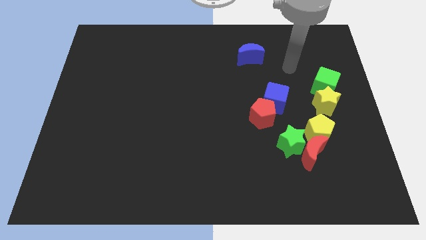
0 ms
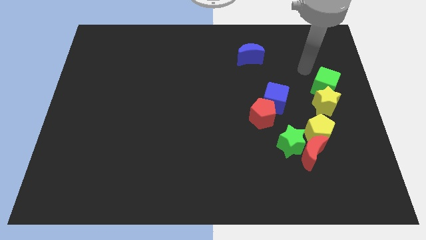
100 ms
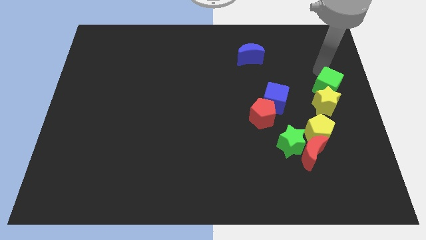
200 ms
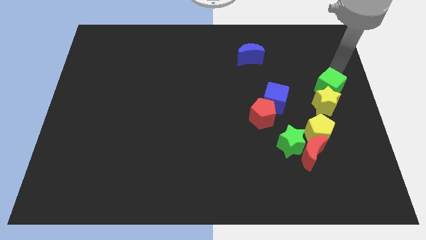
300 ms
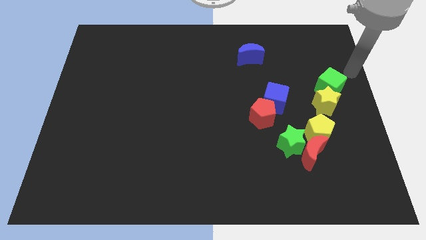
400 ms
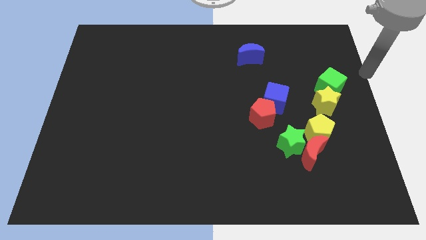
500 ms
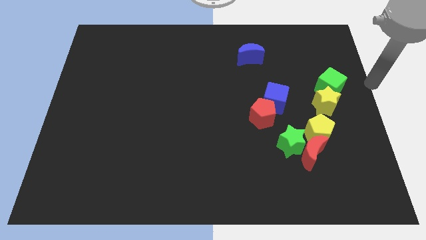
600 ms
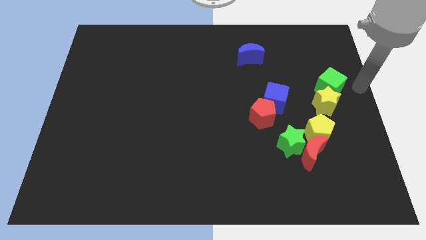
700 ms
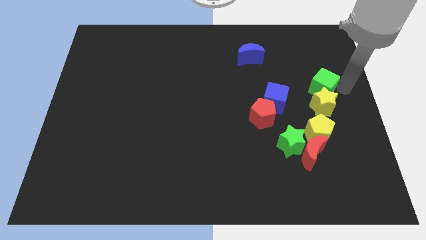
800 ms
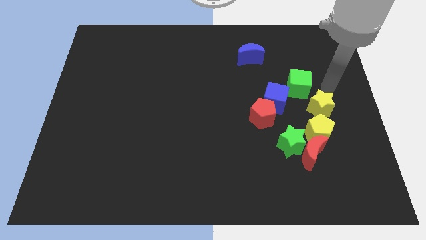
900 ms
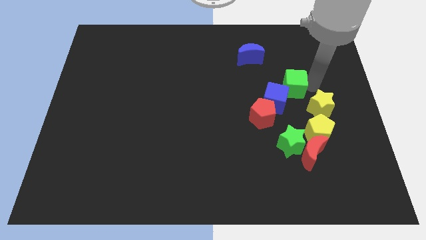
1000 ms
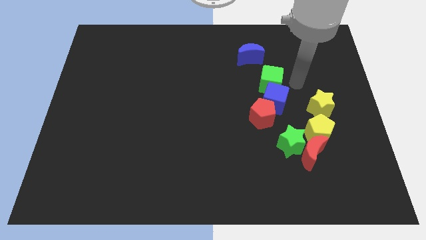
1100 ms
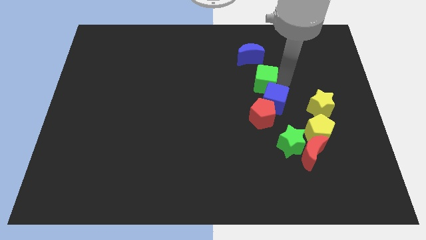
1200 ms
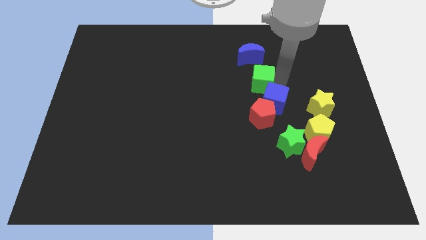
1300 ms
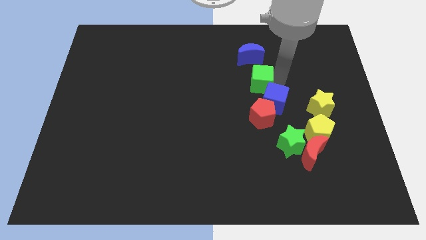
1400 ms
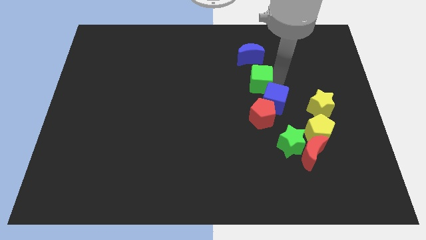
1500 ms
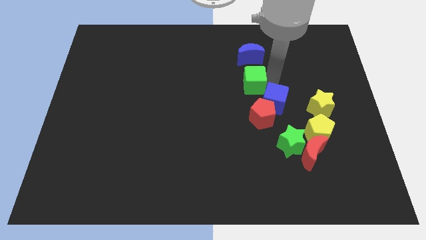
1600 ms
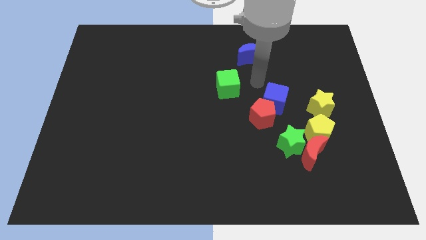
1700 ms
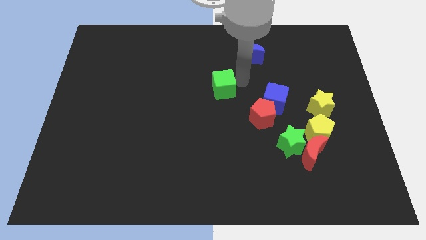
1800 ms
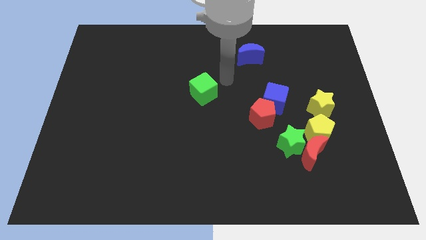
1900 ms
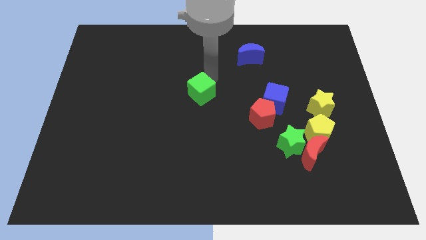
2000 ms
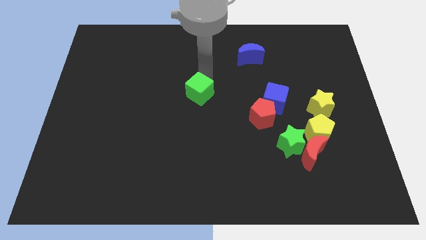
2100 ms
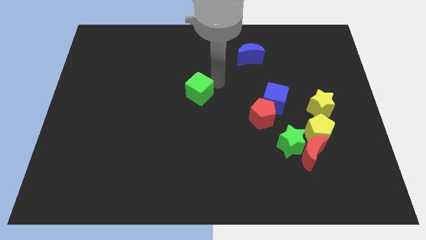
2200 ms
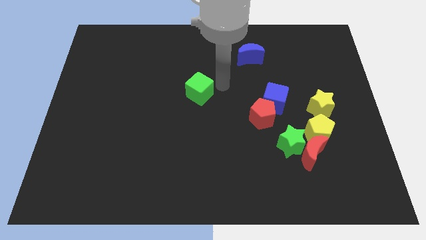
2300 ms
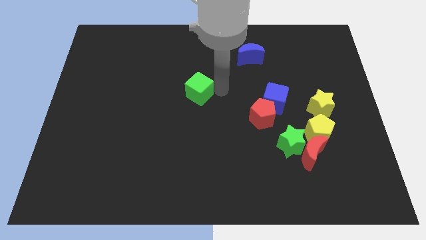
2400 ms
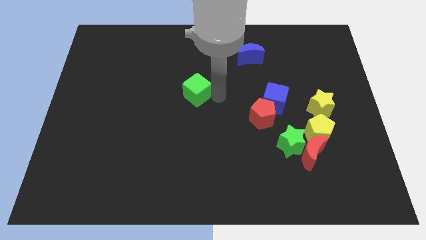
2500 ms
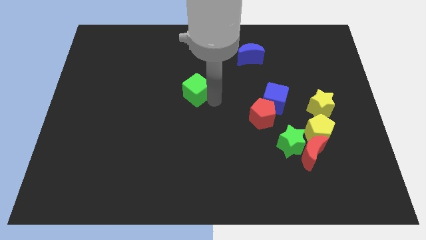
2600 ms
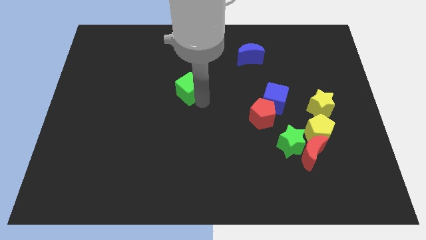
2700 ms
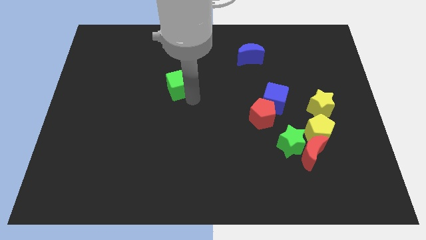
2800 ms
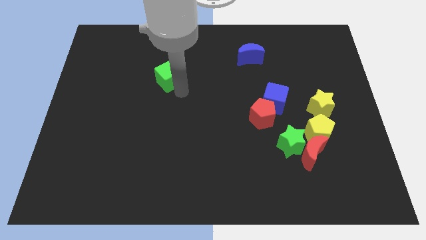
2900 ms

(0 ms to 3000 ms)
move green cube slightly left

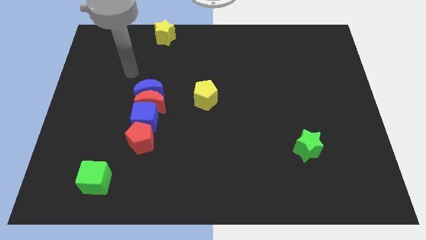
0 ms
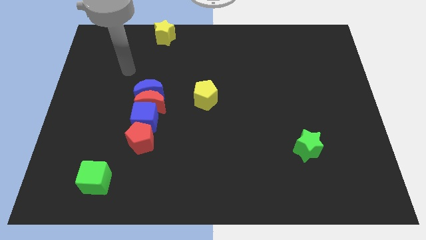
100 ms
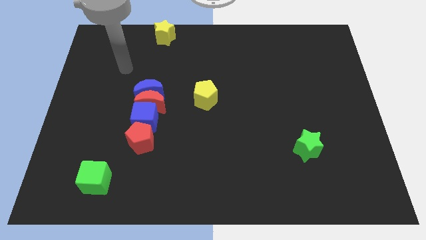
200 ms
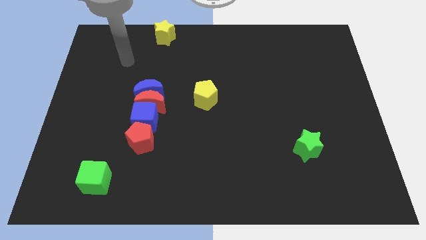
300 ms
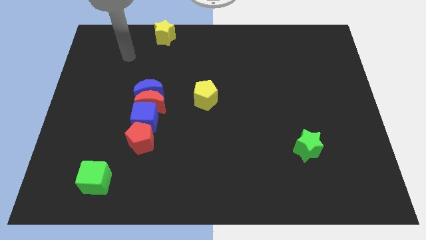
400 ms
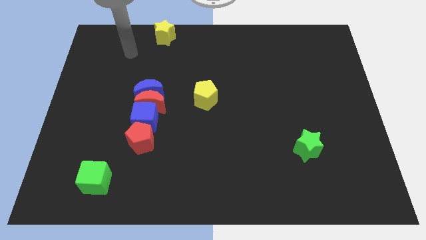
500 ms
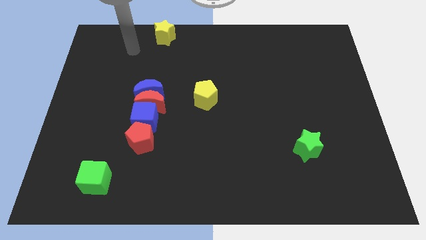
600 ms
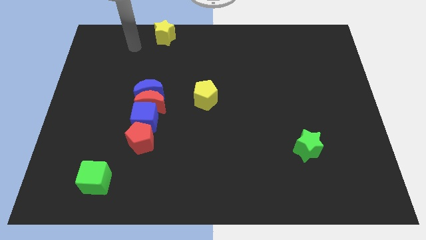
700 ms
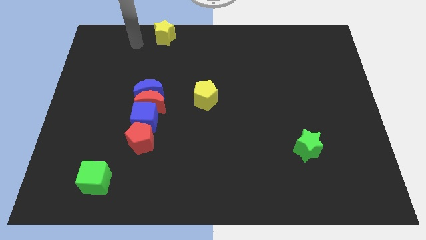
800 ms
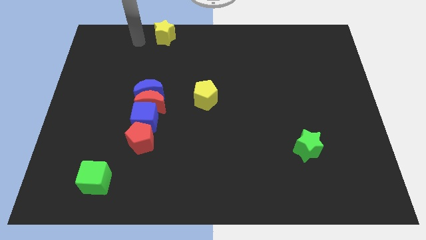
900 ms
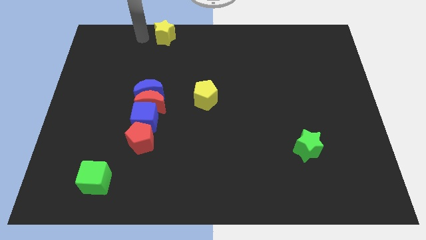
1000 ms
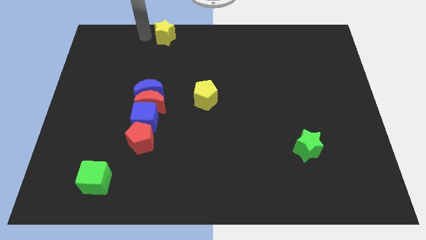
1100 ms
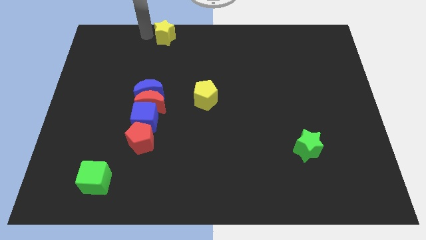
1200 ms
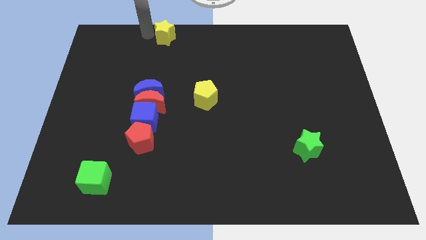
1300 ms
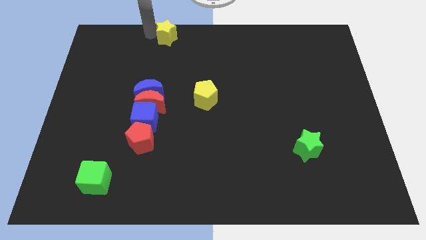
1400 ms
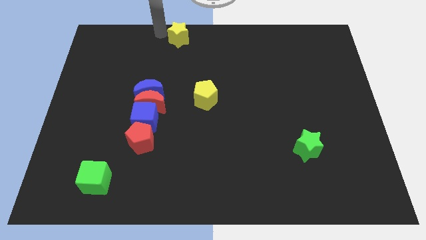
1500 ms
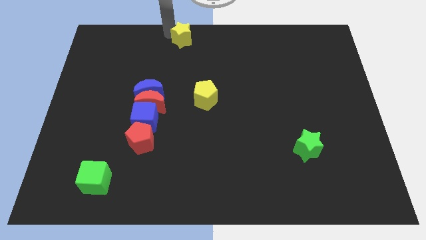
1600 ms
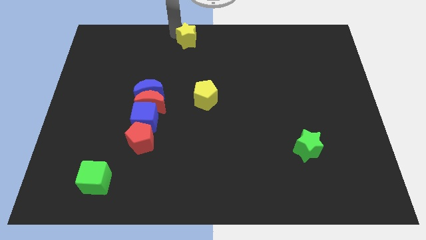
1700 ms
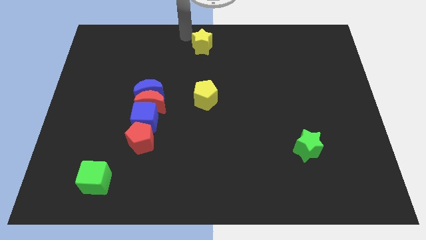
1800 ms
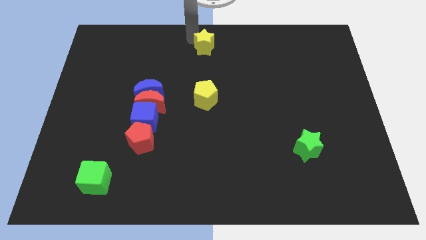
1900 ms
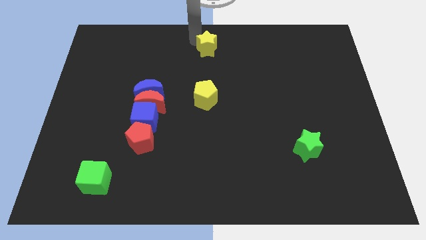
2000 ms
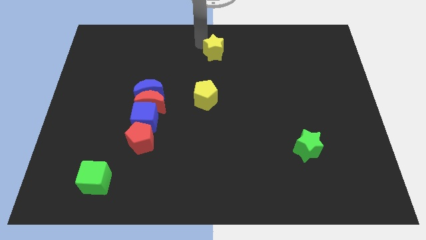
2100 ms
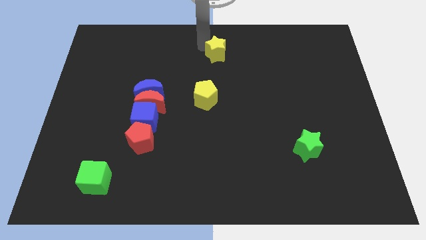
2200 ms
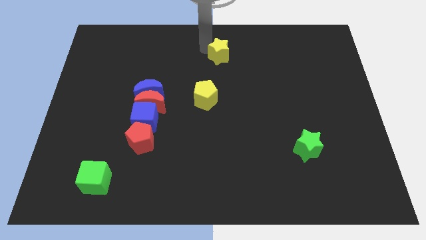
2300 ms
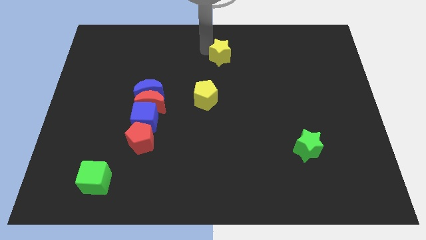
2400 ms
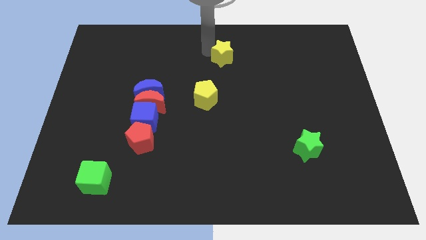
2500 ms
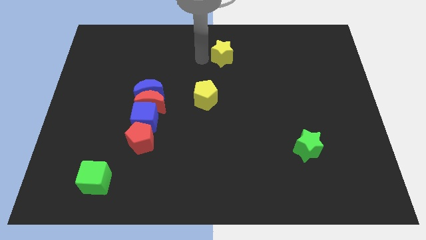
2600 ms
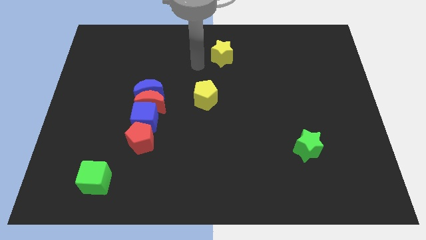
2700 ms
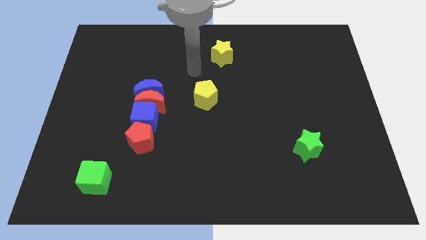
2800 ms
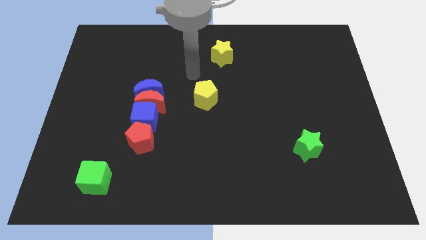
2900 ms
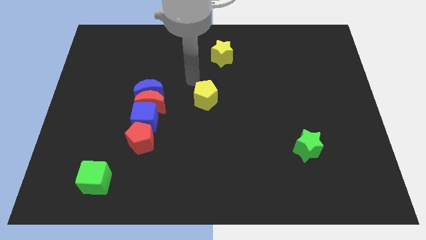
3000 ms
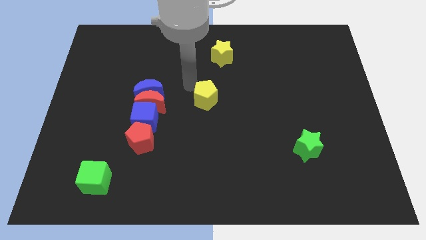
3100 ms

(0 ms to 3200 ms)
move the yellow star diagonally to the top right of the blue moon

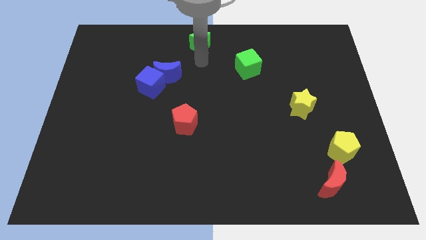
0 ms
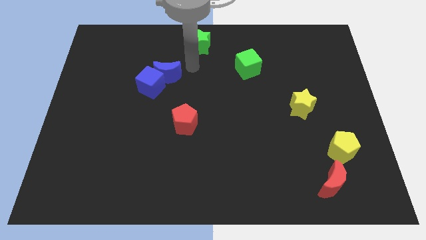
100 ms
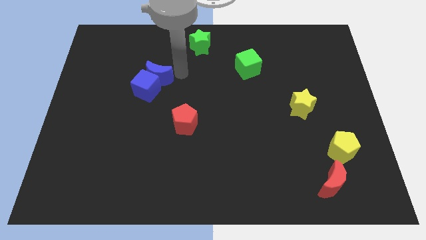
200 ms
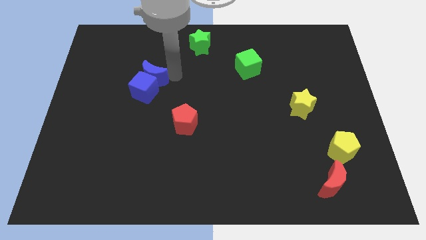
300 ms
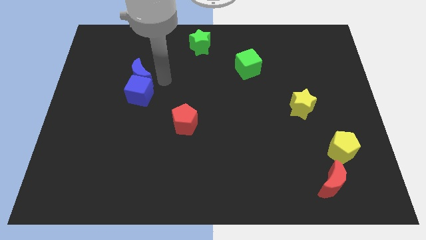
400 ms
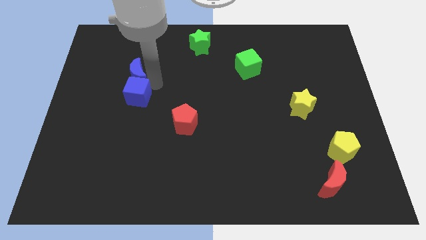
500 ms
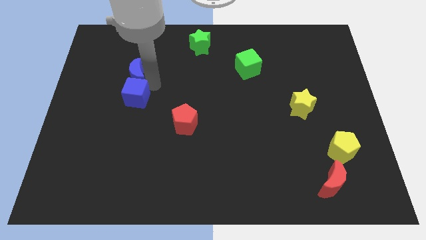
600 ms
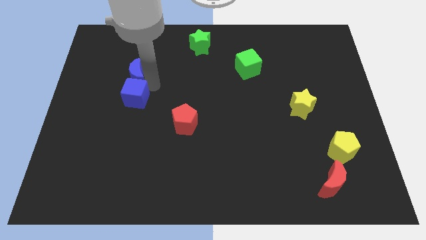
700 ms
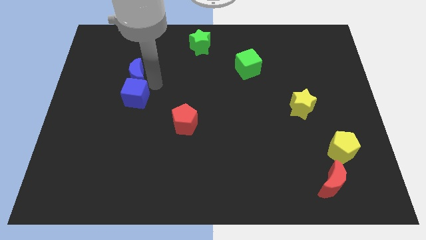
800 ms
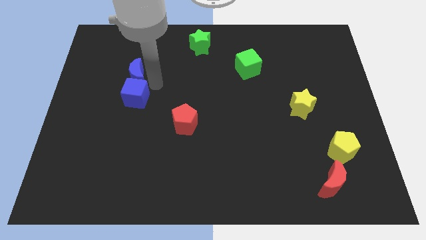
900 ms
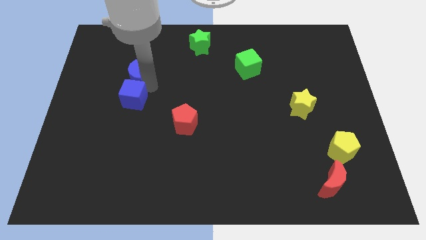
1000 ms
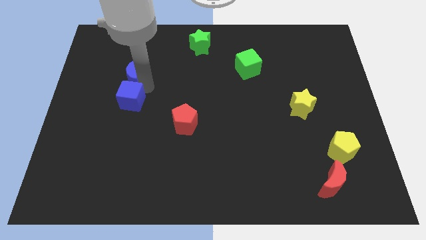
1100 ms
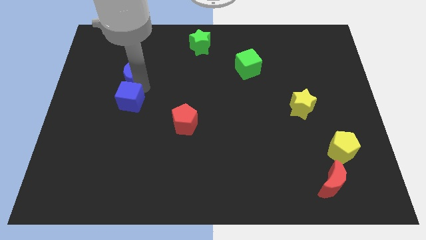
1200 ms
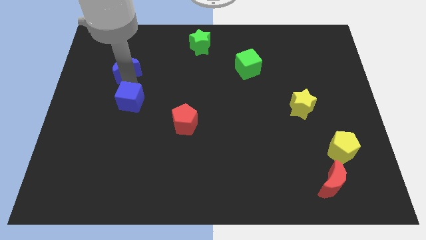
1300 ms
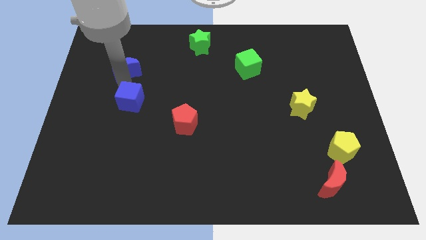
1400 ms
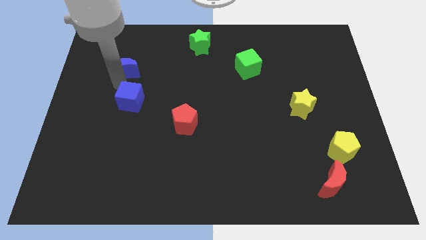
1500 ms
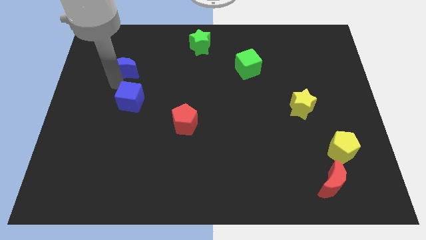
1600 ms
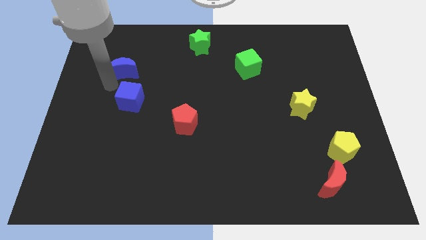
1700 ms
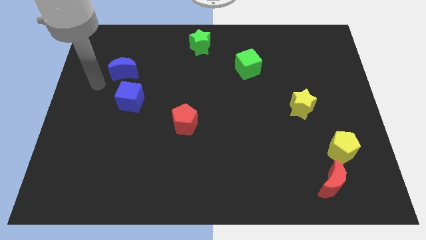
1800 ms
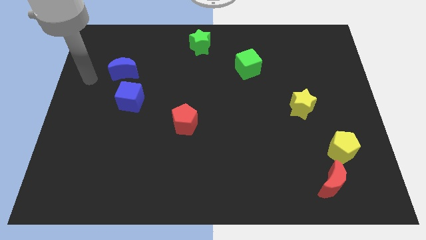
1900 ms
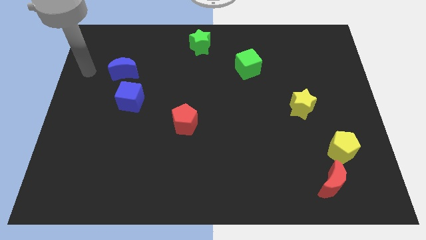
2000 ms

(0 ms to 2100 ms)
separate blue cube and the blue moon

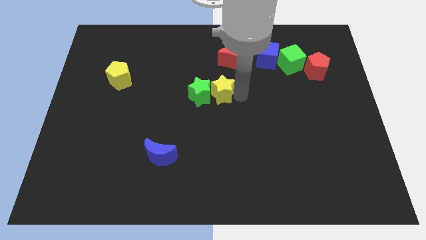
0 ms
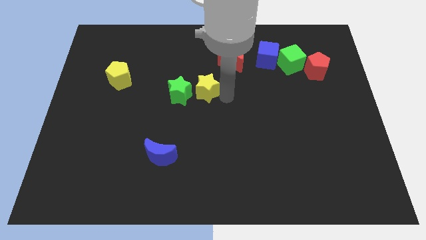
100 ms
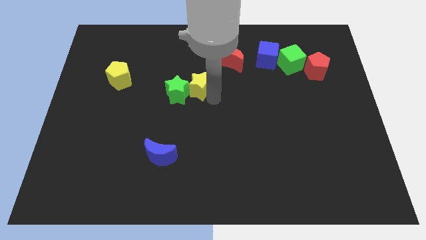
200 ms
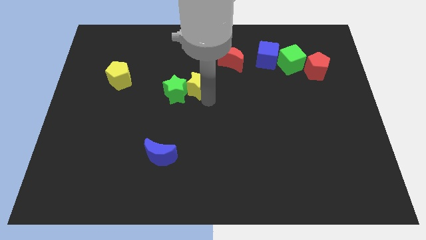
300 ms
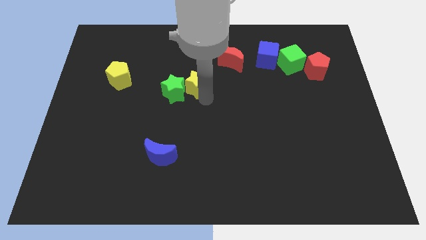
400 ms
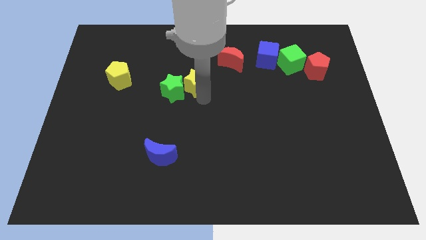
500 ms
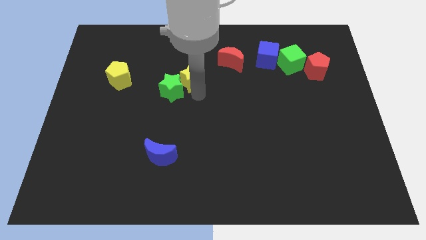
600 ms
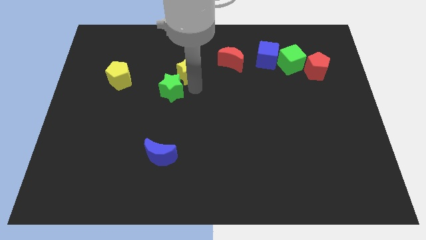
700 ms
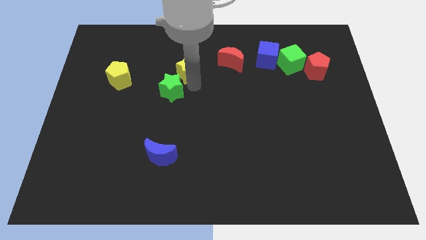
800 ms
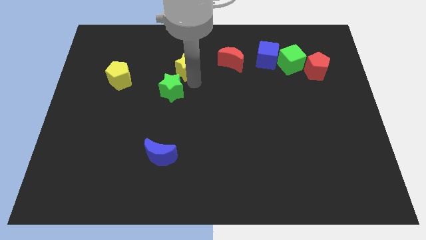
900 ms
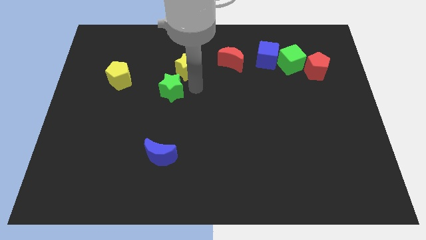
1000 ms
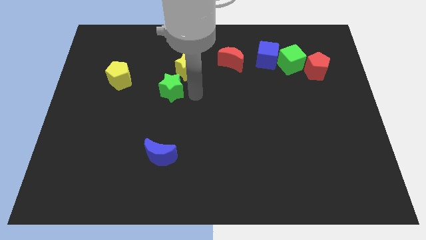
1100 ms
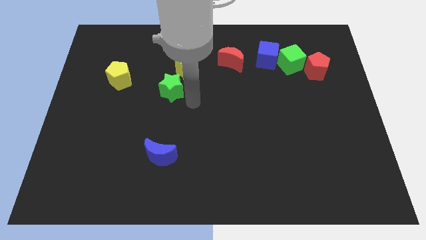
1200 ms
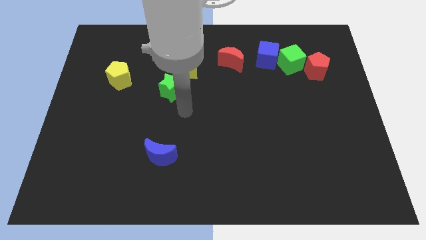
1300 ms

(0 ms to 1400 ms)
move the green star diagonal to the right of the yellow pentagon
